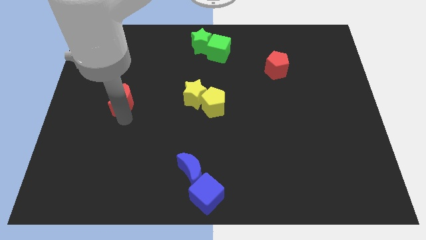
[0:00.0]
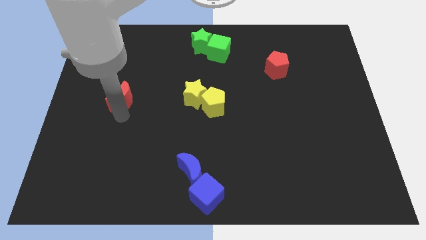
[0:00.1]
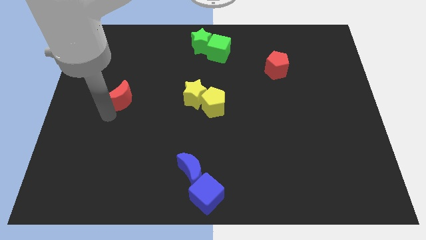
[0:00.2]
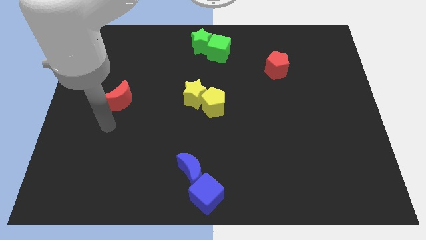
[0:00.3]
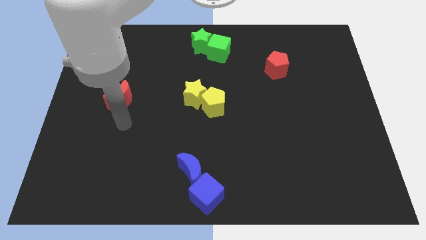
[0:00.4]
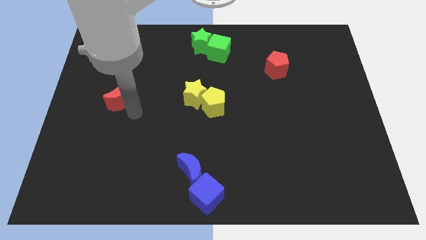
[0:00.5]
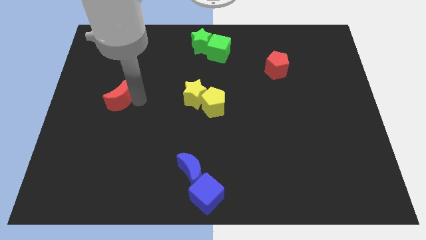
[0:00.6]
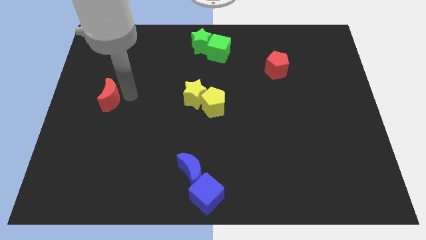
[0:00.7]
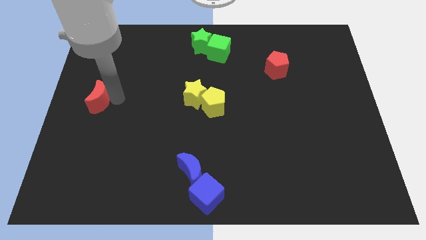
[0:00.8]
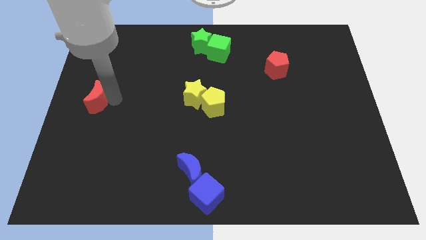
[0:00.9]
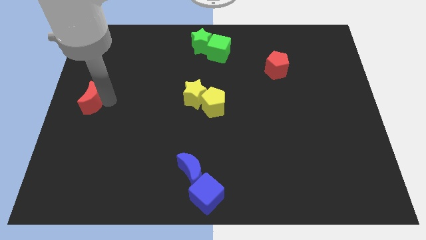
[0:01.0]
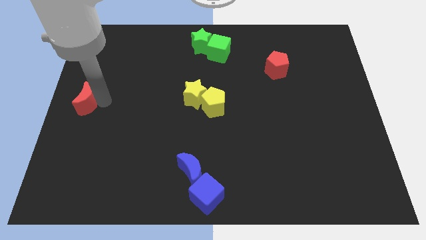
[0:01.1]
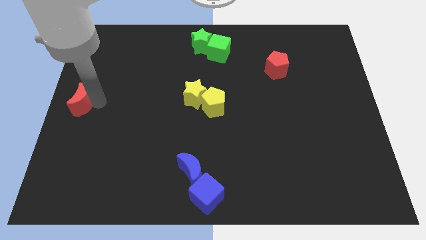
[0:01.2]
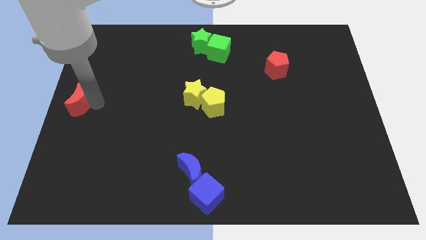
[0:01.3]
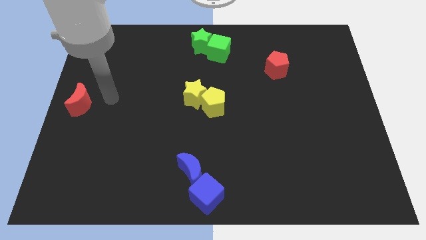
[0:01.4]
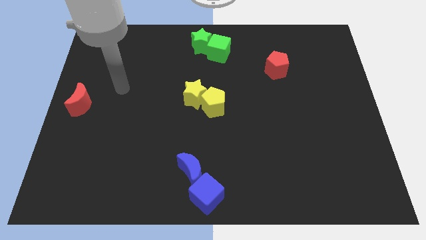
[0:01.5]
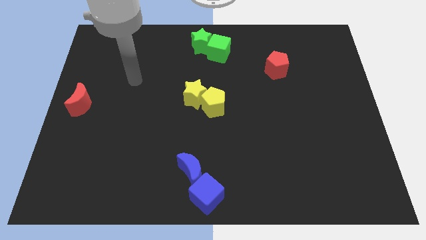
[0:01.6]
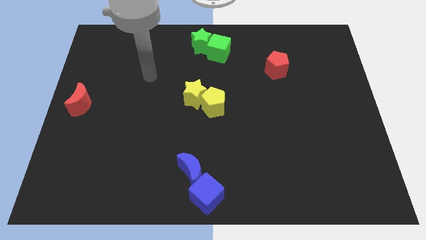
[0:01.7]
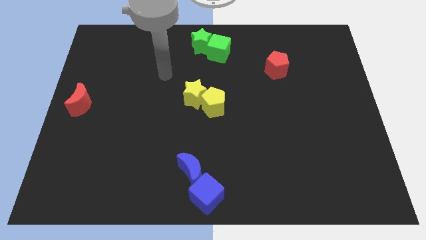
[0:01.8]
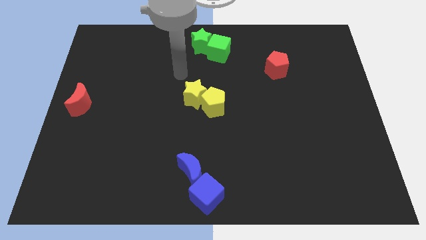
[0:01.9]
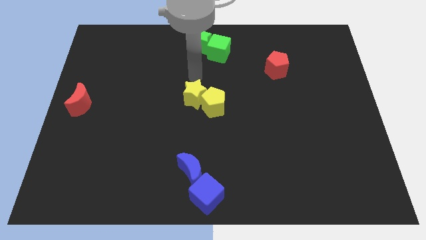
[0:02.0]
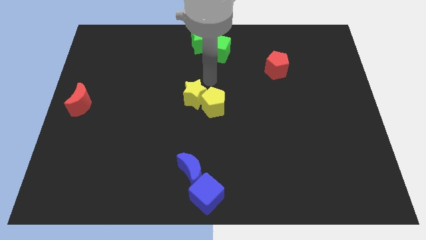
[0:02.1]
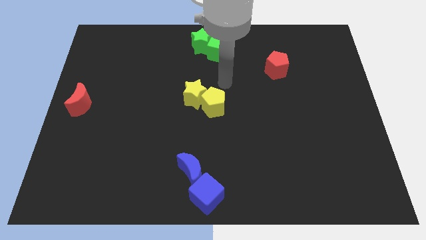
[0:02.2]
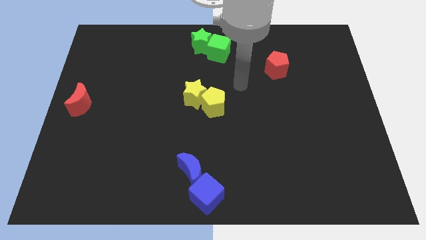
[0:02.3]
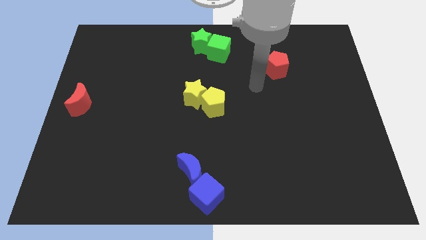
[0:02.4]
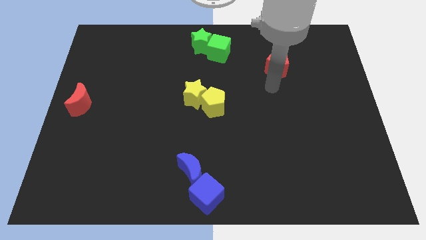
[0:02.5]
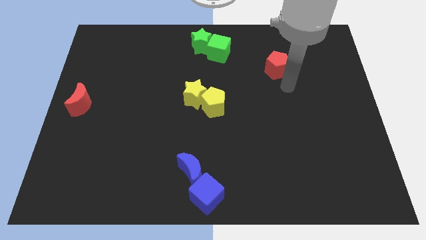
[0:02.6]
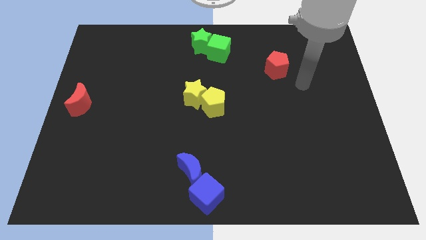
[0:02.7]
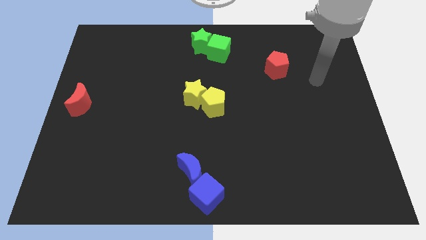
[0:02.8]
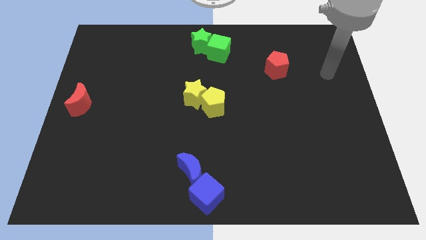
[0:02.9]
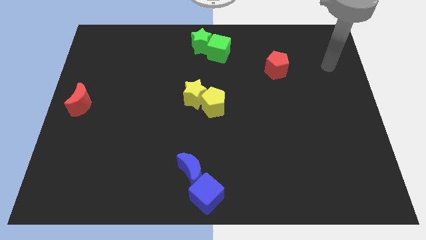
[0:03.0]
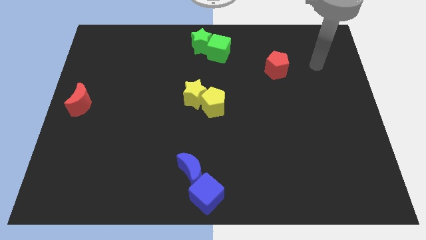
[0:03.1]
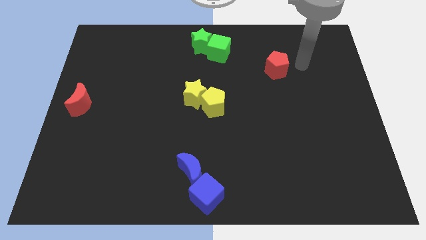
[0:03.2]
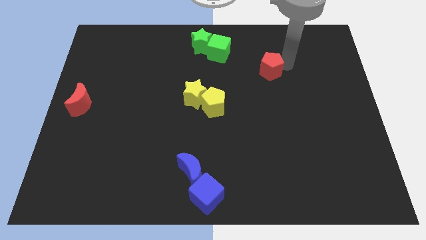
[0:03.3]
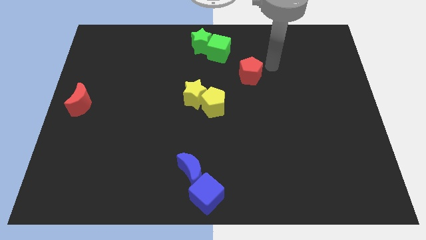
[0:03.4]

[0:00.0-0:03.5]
push the red crescent to the center left of the board

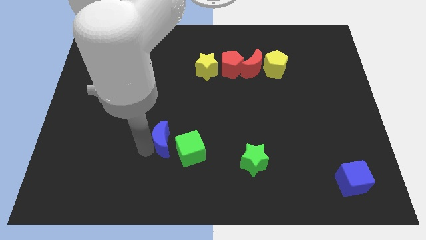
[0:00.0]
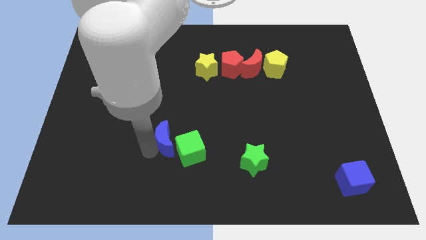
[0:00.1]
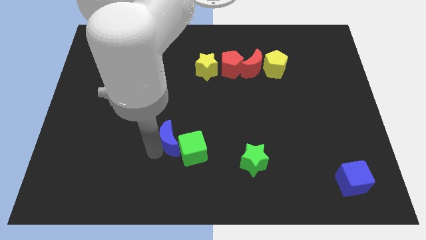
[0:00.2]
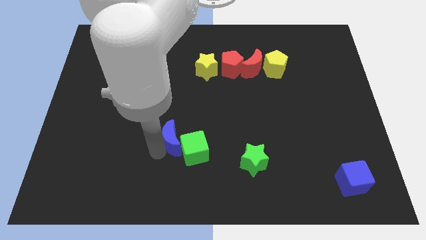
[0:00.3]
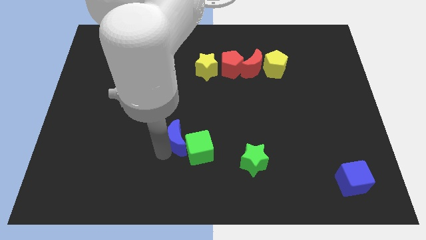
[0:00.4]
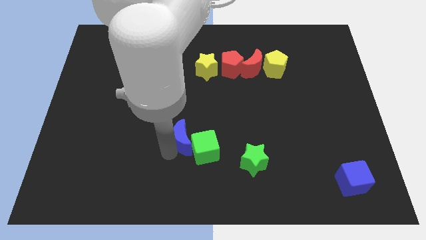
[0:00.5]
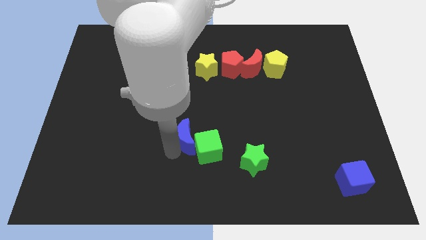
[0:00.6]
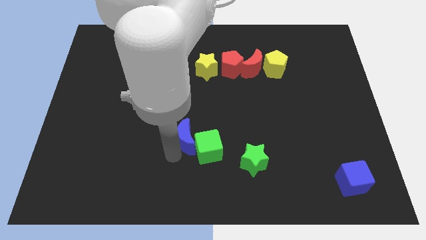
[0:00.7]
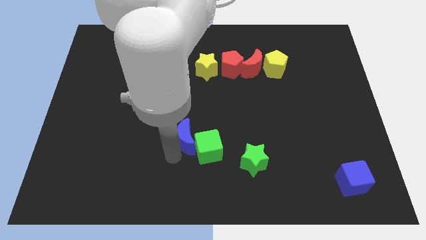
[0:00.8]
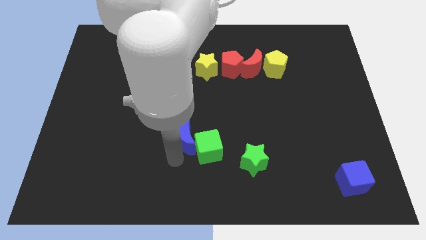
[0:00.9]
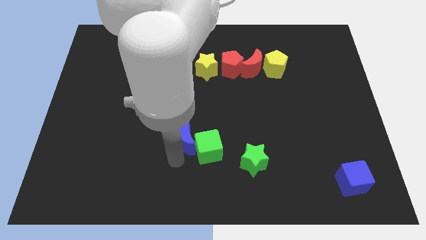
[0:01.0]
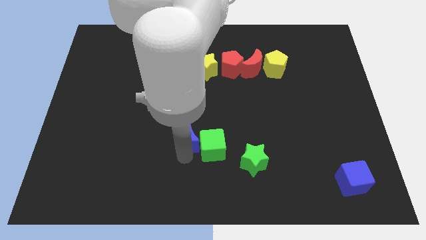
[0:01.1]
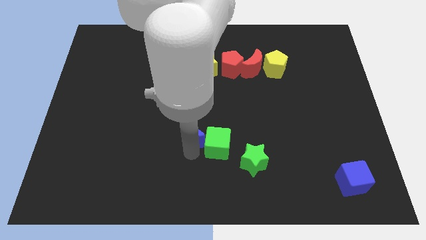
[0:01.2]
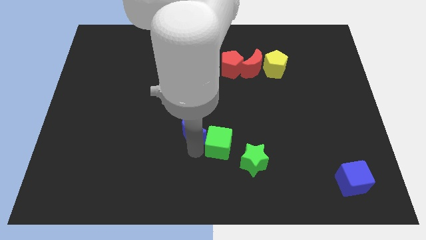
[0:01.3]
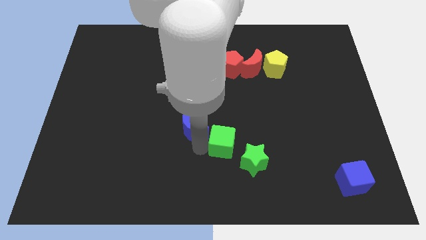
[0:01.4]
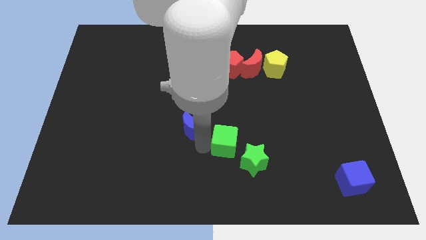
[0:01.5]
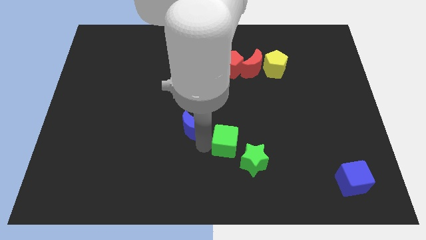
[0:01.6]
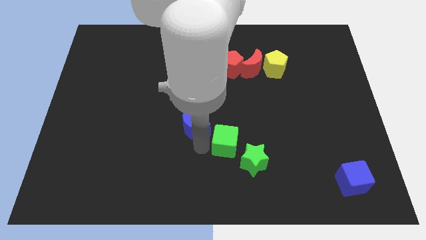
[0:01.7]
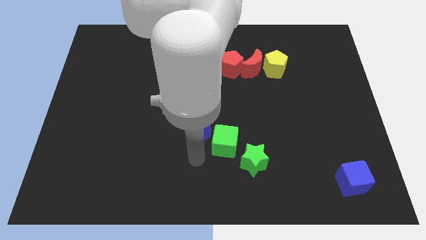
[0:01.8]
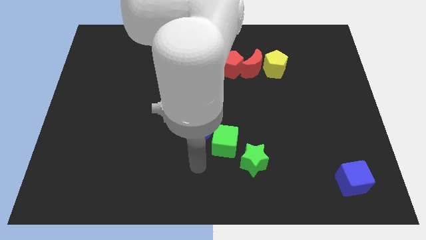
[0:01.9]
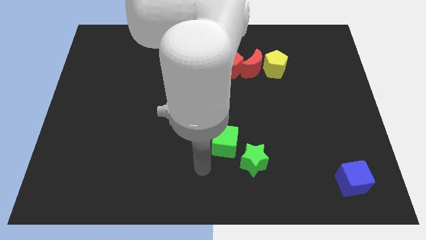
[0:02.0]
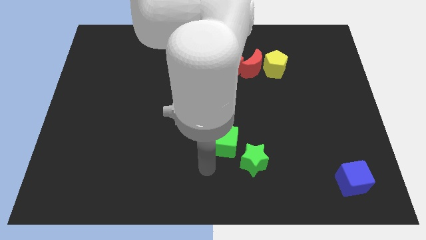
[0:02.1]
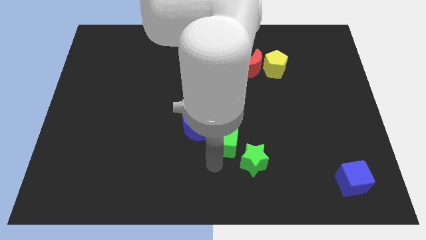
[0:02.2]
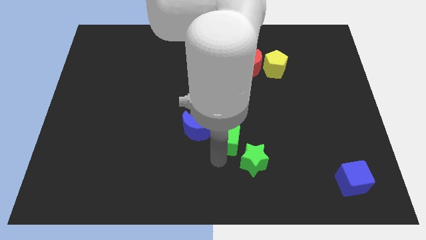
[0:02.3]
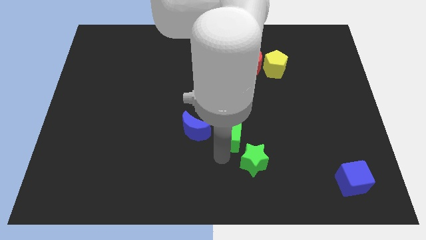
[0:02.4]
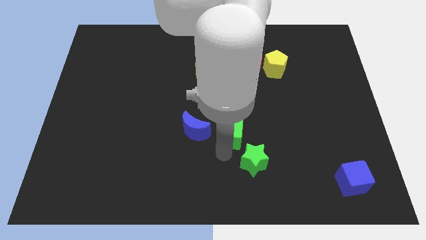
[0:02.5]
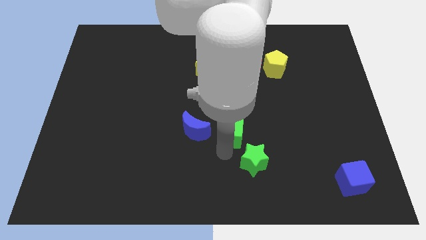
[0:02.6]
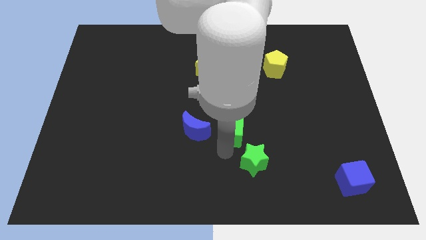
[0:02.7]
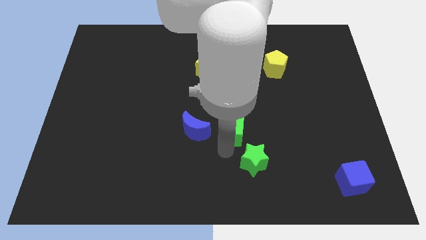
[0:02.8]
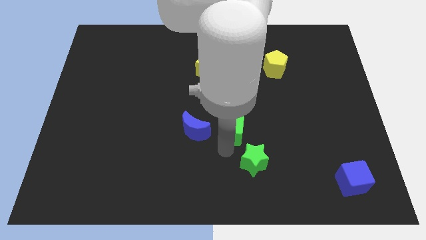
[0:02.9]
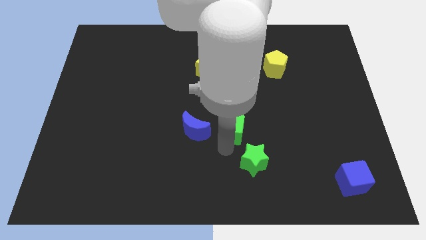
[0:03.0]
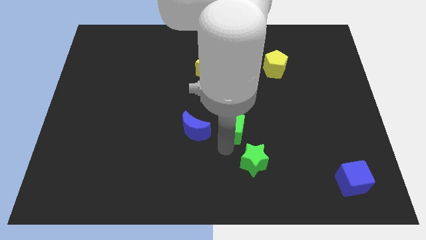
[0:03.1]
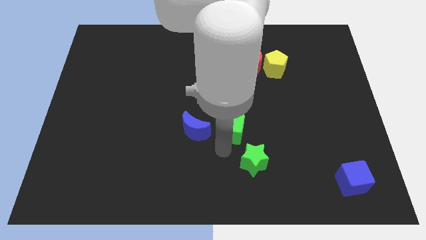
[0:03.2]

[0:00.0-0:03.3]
move the blue crescent and green cube at the top left side of the green star

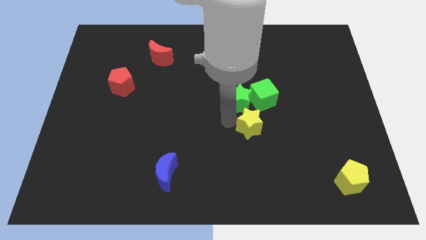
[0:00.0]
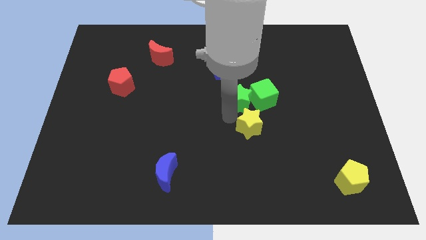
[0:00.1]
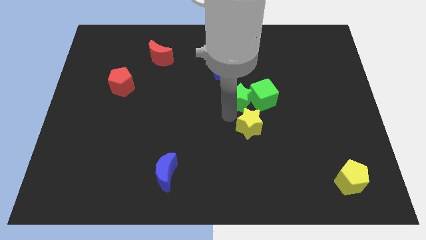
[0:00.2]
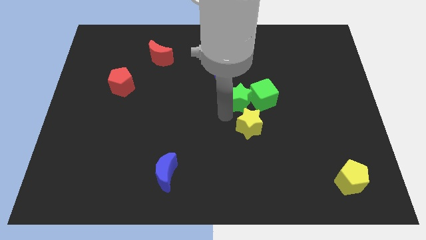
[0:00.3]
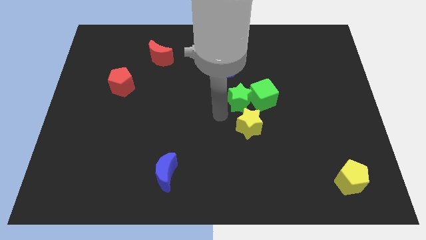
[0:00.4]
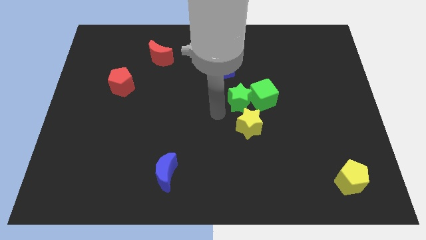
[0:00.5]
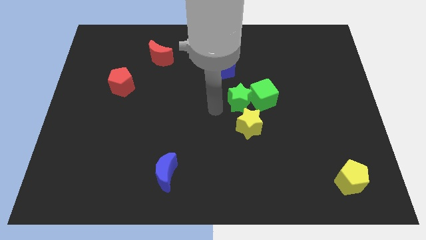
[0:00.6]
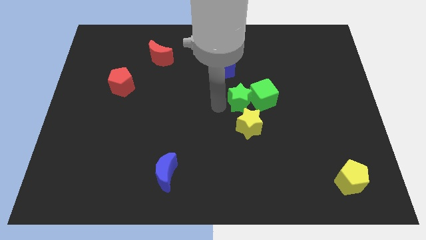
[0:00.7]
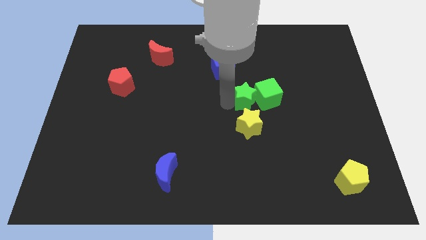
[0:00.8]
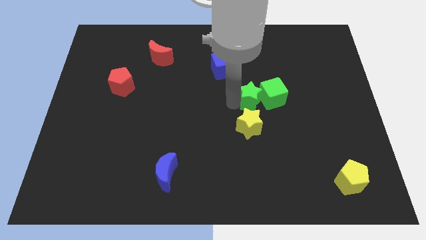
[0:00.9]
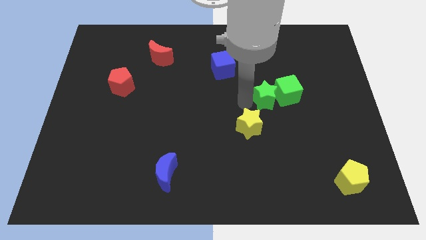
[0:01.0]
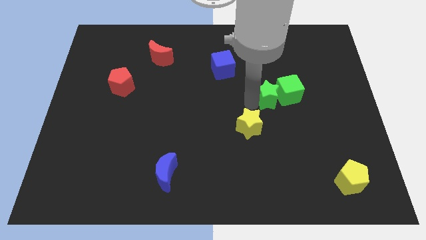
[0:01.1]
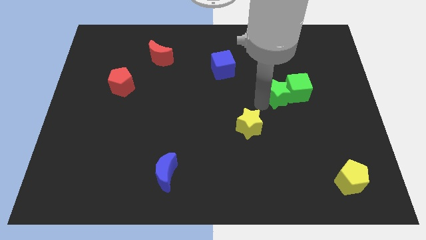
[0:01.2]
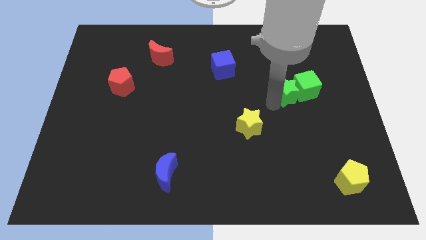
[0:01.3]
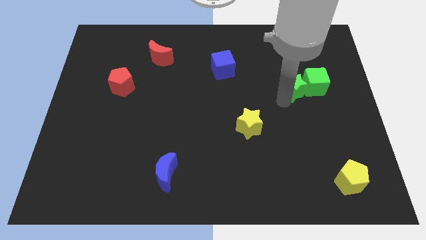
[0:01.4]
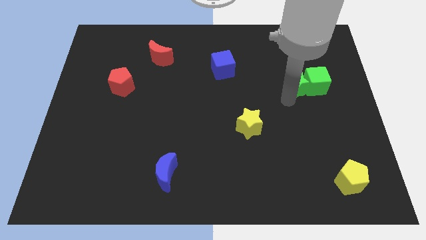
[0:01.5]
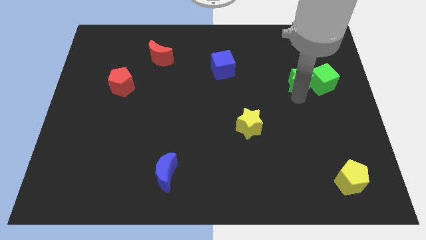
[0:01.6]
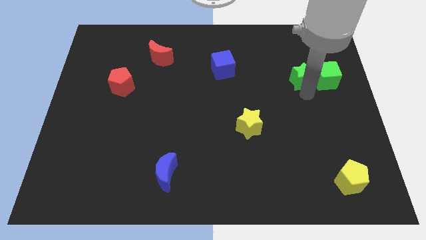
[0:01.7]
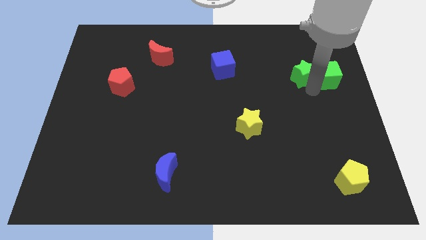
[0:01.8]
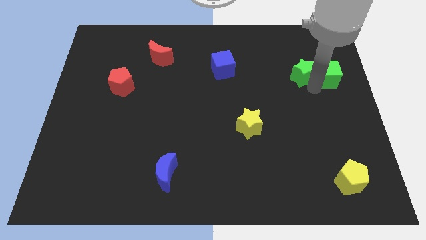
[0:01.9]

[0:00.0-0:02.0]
move both the green blocks towards the top right side of the board

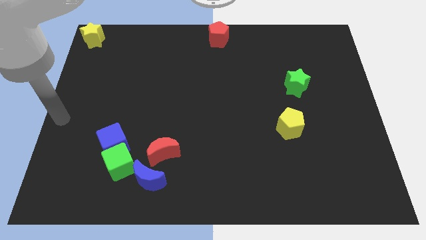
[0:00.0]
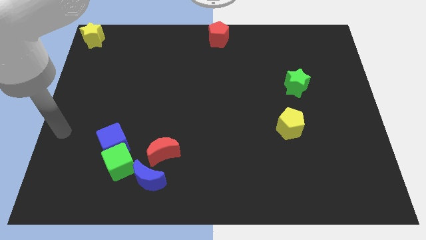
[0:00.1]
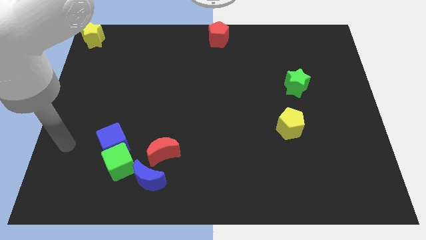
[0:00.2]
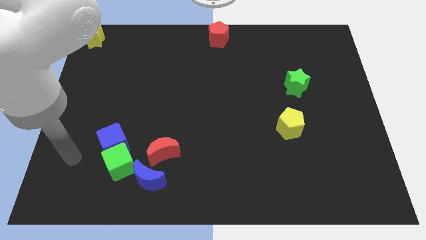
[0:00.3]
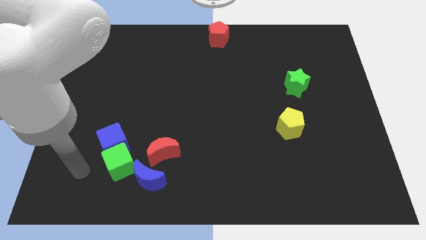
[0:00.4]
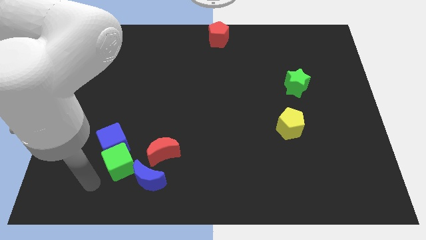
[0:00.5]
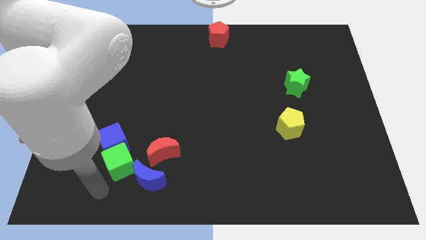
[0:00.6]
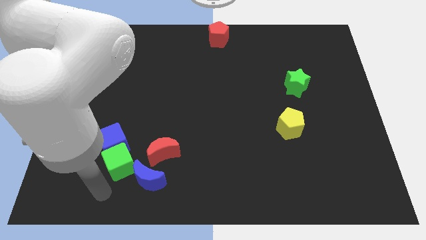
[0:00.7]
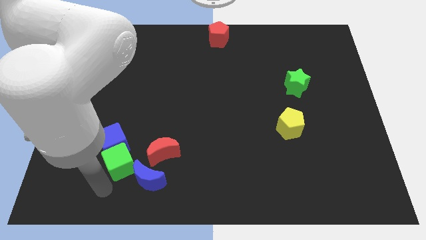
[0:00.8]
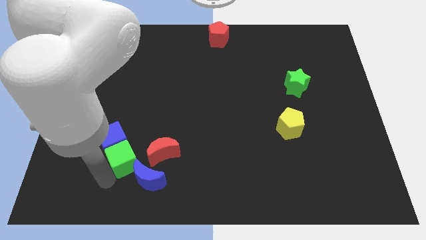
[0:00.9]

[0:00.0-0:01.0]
tap the green cube
